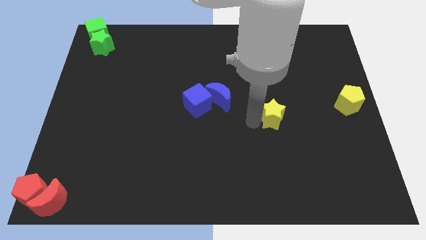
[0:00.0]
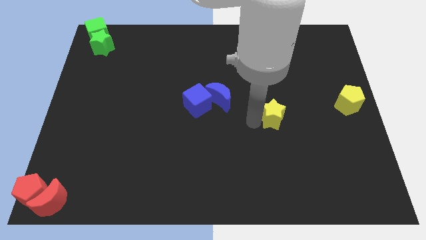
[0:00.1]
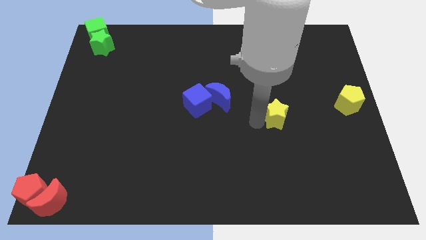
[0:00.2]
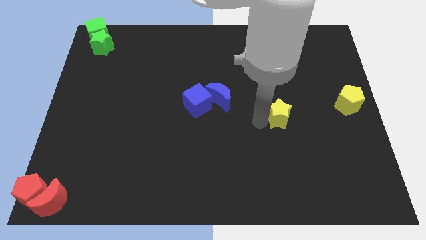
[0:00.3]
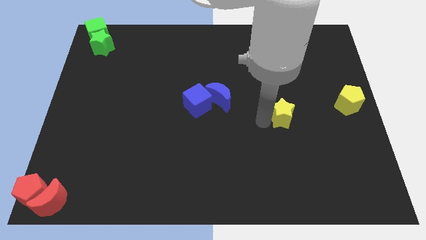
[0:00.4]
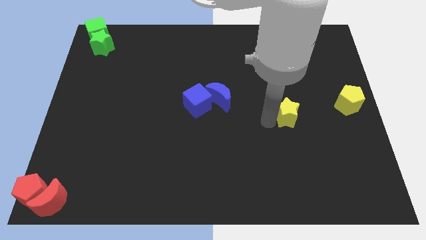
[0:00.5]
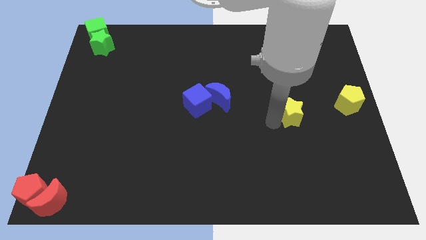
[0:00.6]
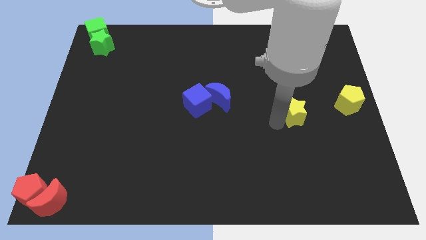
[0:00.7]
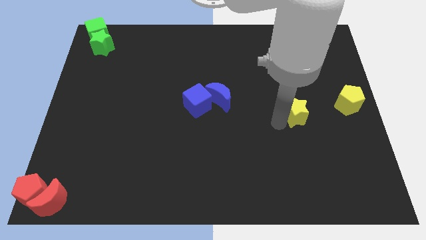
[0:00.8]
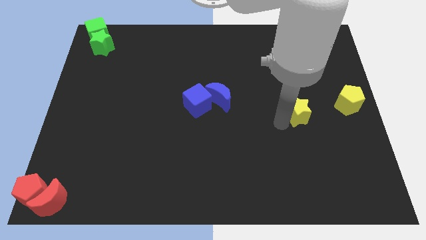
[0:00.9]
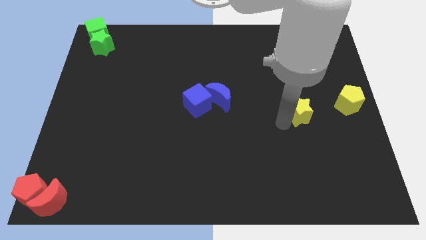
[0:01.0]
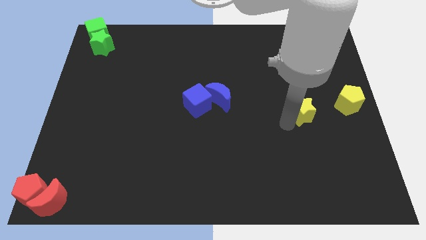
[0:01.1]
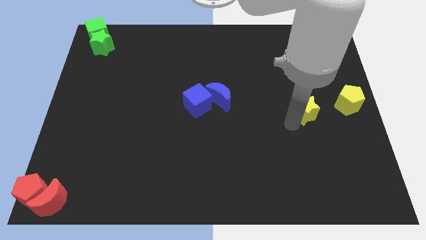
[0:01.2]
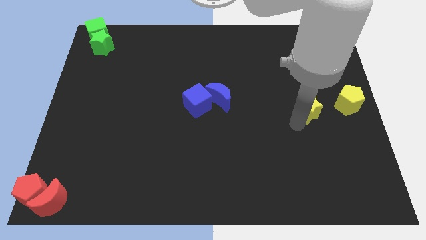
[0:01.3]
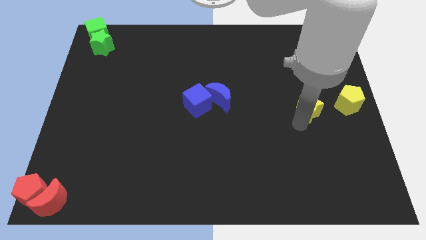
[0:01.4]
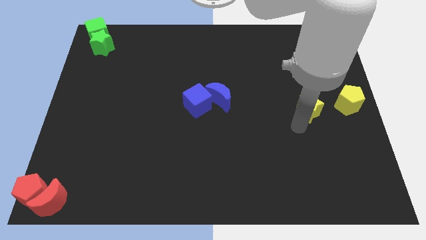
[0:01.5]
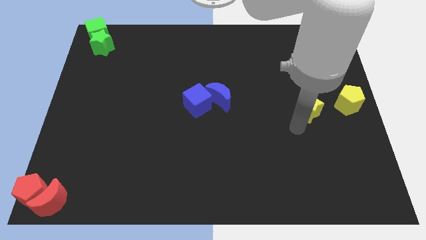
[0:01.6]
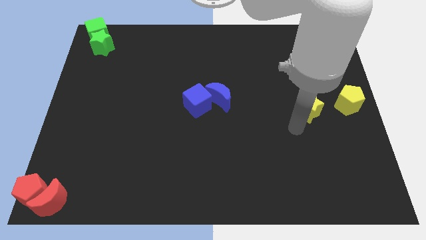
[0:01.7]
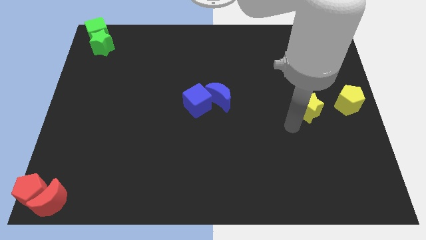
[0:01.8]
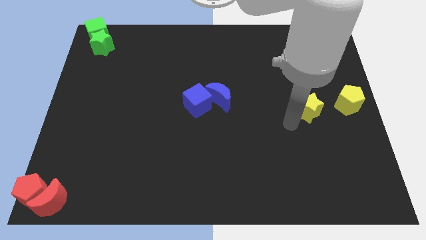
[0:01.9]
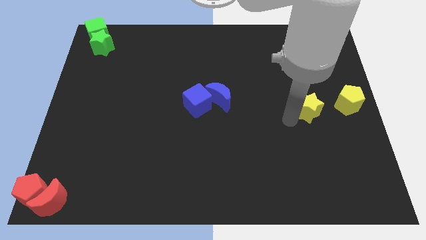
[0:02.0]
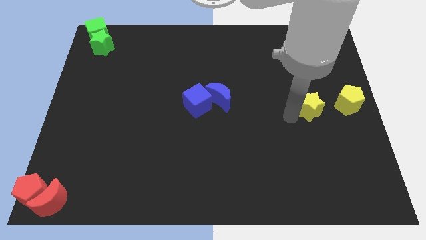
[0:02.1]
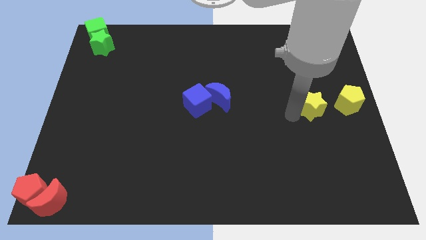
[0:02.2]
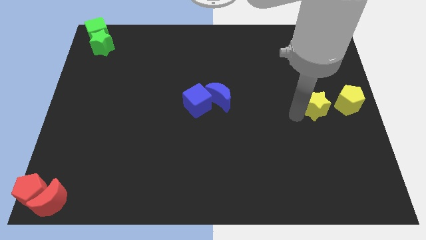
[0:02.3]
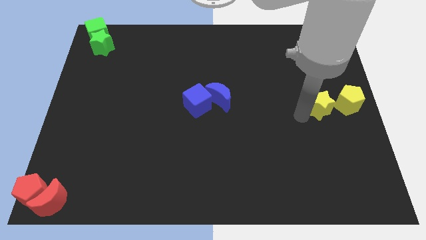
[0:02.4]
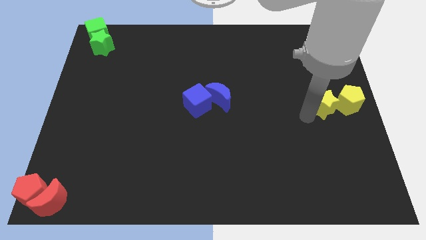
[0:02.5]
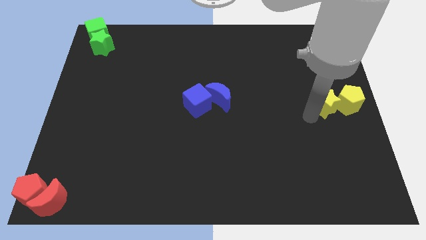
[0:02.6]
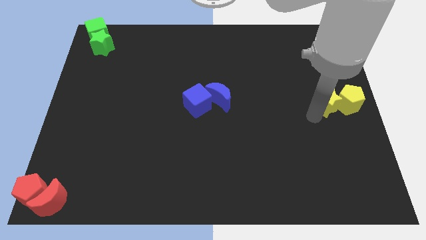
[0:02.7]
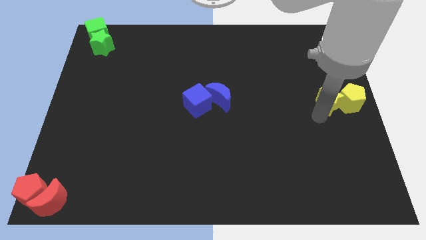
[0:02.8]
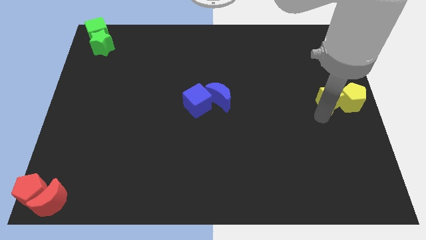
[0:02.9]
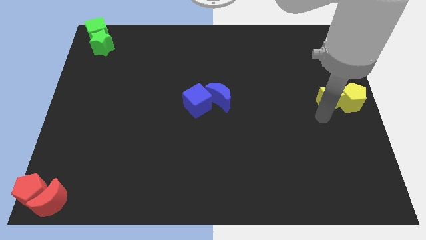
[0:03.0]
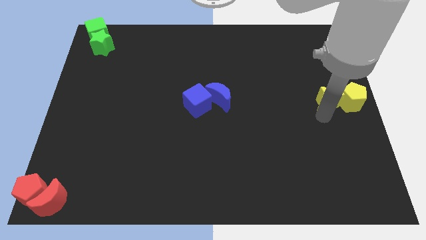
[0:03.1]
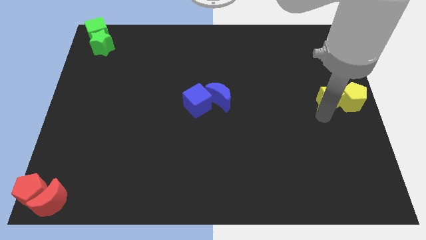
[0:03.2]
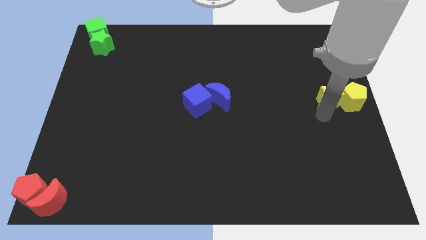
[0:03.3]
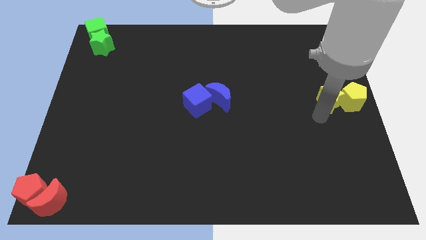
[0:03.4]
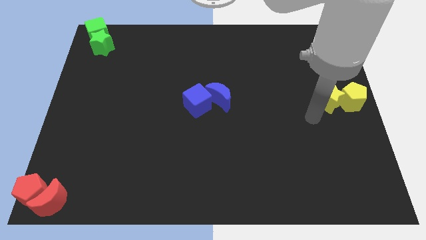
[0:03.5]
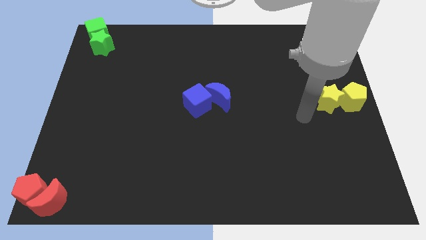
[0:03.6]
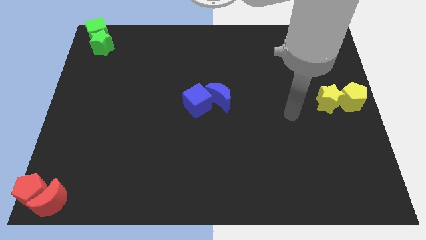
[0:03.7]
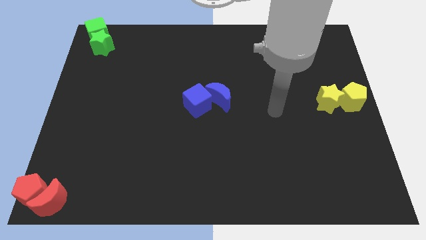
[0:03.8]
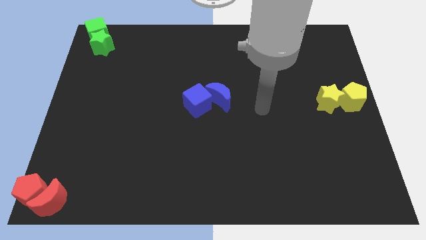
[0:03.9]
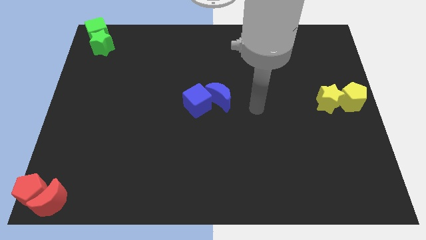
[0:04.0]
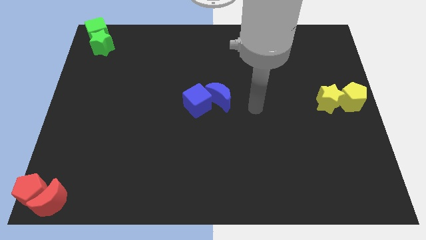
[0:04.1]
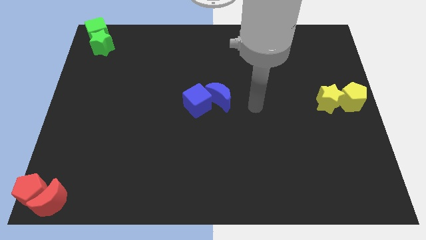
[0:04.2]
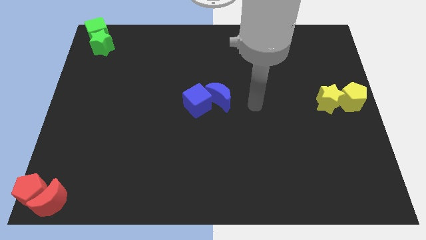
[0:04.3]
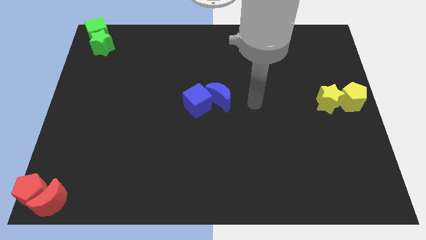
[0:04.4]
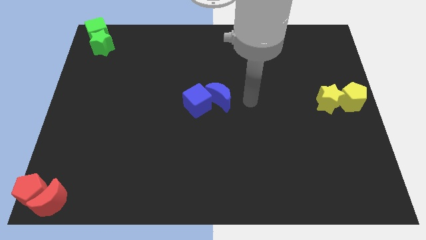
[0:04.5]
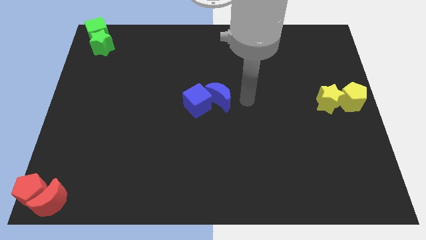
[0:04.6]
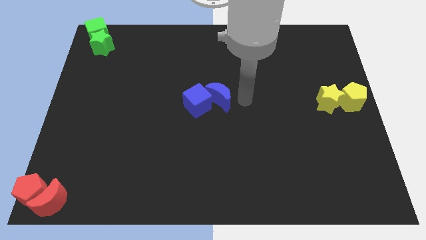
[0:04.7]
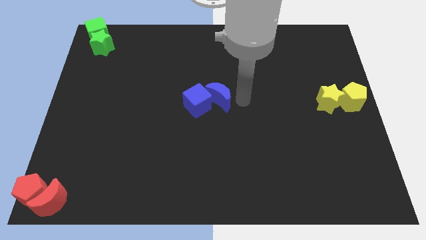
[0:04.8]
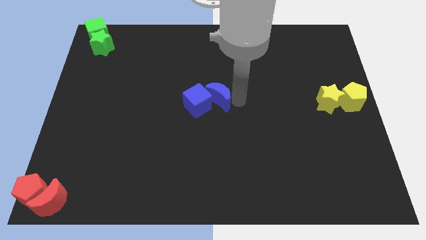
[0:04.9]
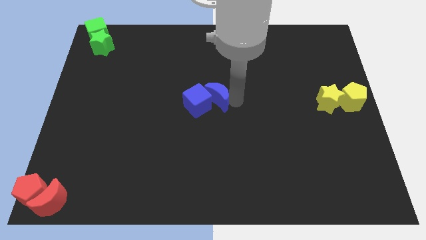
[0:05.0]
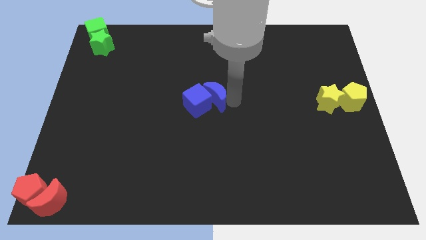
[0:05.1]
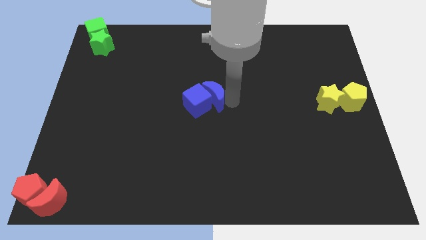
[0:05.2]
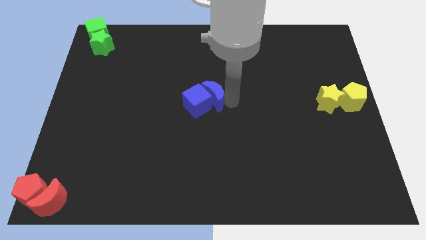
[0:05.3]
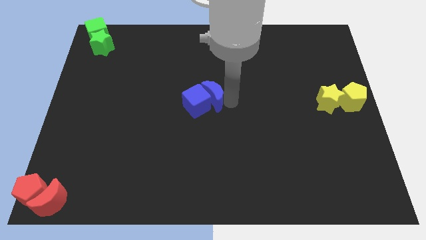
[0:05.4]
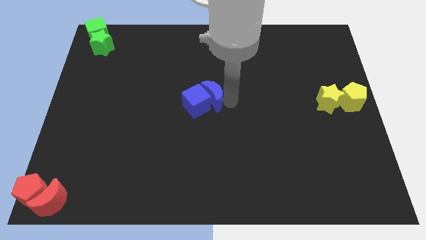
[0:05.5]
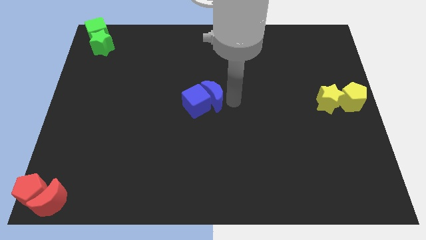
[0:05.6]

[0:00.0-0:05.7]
push yellow star into yellow pentagon

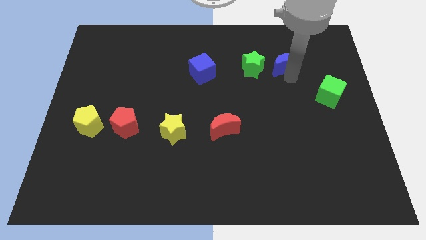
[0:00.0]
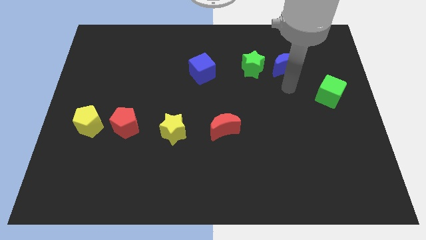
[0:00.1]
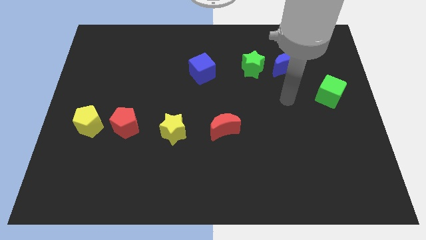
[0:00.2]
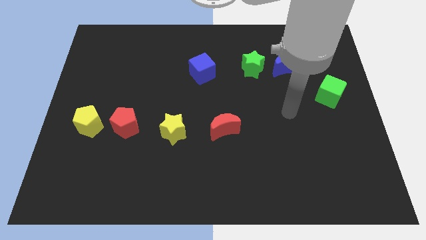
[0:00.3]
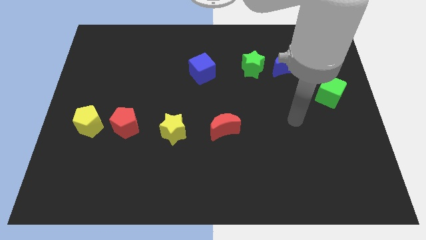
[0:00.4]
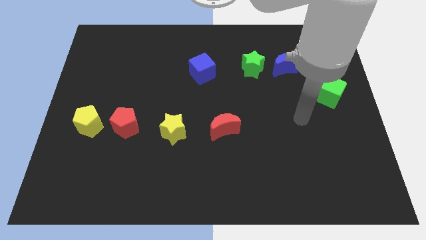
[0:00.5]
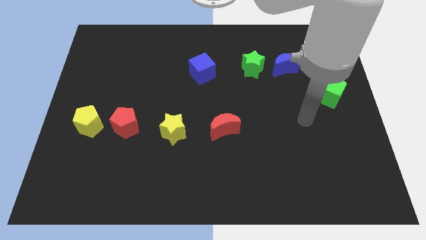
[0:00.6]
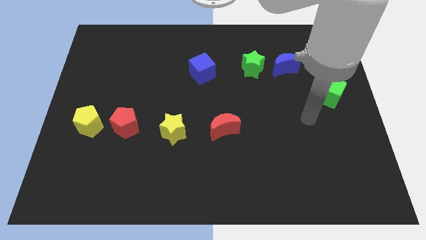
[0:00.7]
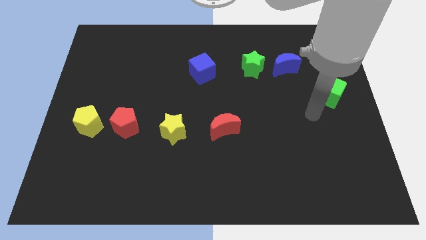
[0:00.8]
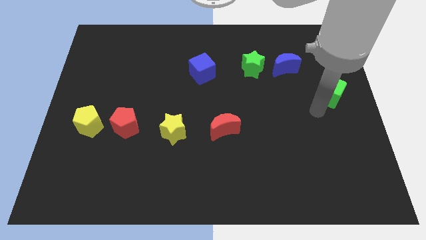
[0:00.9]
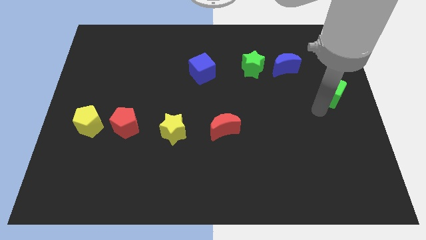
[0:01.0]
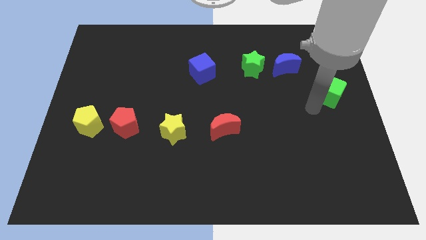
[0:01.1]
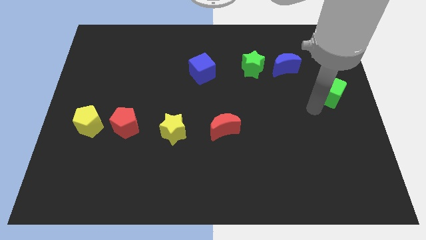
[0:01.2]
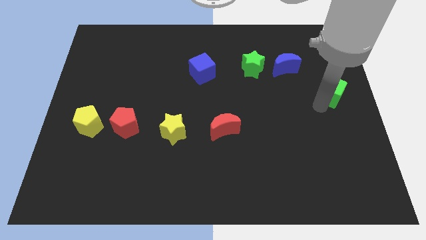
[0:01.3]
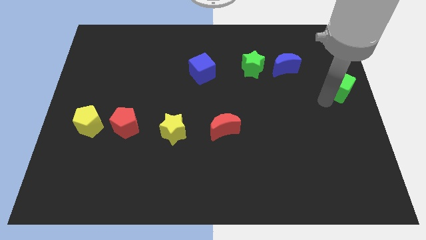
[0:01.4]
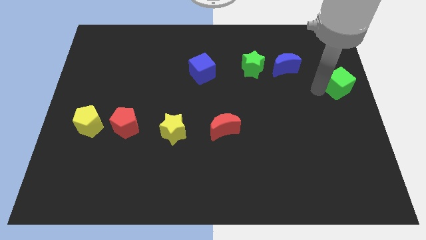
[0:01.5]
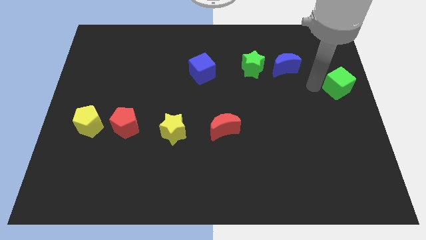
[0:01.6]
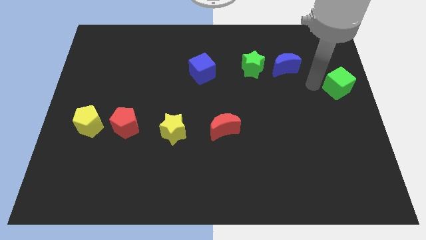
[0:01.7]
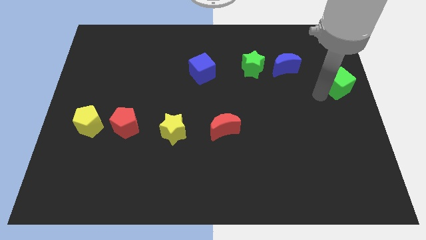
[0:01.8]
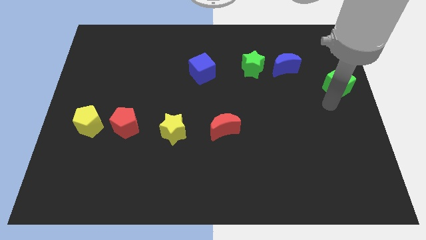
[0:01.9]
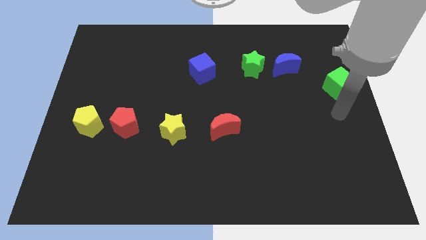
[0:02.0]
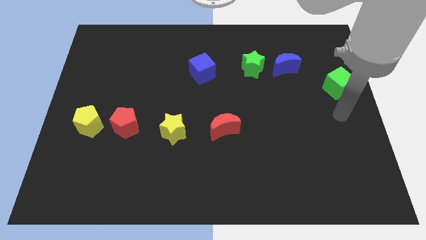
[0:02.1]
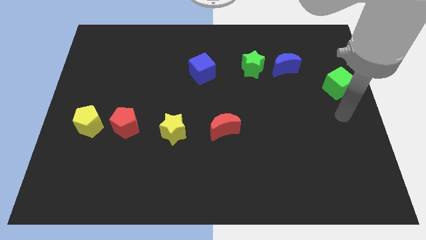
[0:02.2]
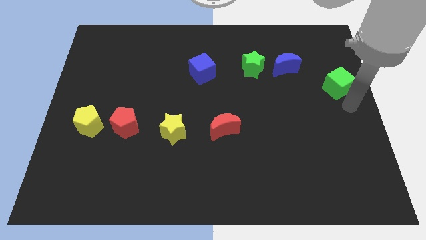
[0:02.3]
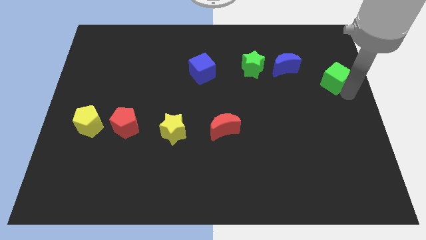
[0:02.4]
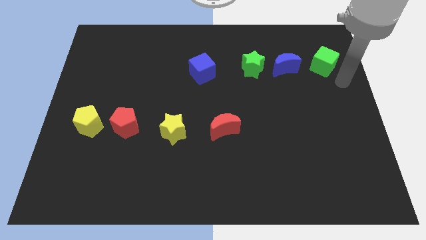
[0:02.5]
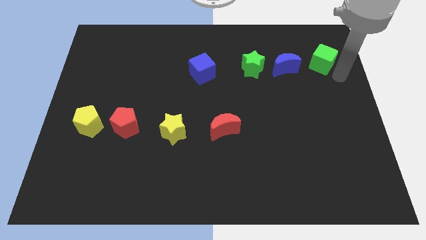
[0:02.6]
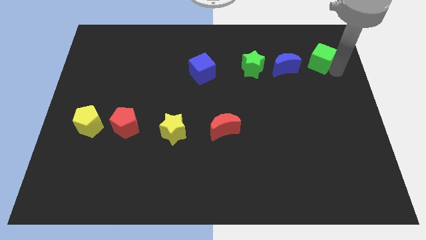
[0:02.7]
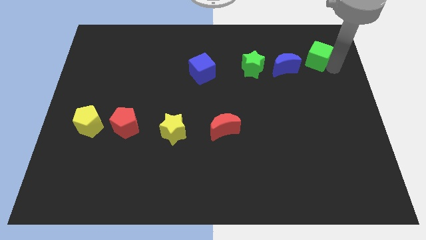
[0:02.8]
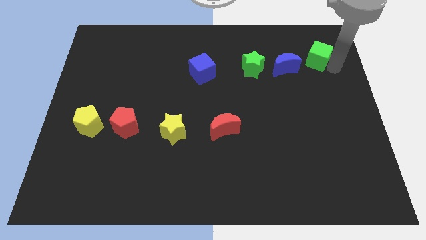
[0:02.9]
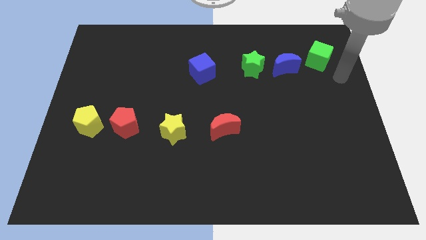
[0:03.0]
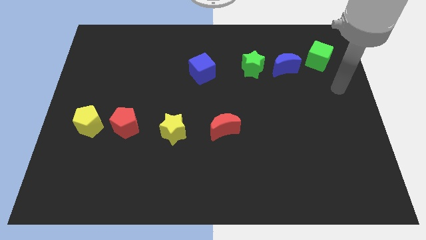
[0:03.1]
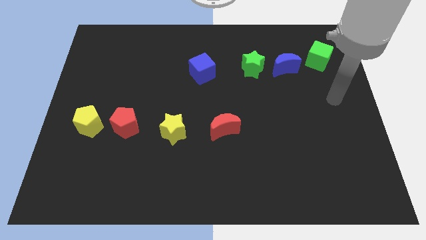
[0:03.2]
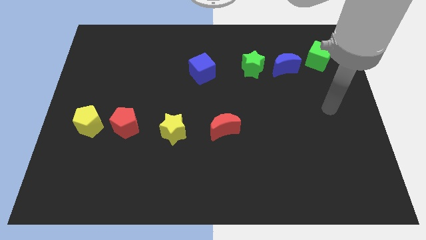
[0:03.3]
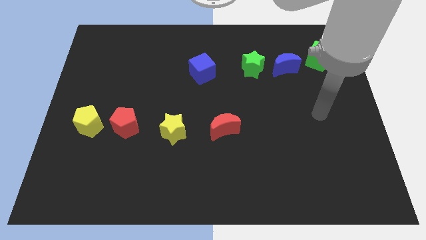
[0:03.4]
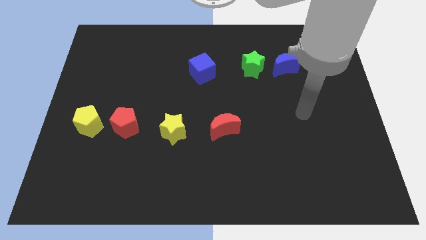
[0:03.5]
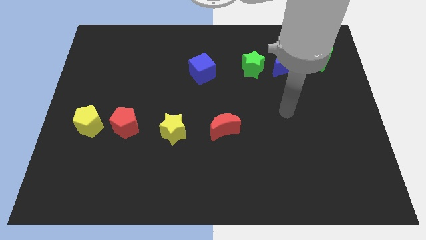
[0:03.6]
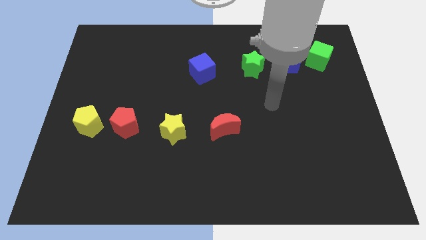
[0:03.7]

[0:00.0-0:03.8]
push the green cube to the right side of the blue moon
